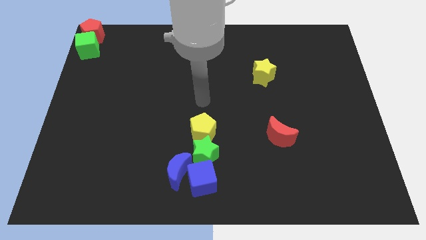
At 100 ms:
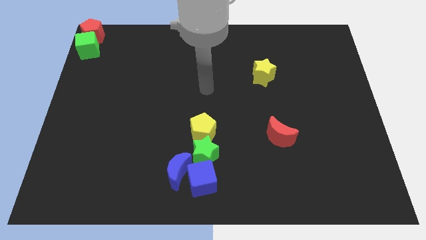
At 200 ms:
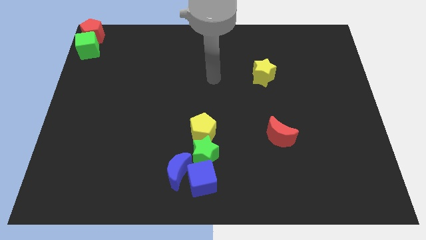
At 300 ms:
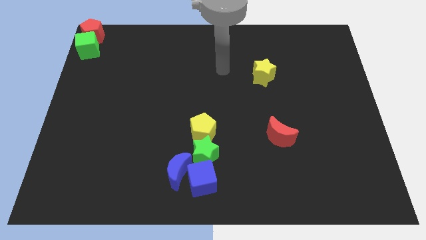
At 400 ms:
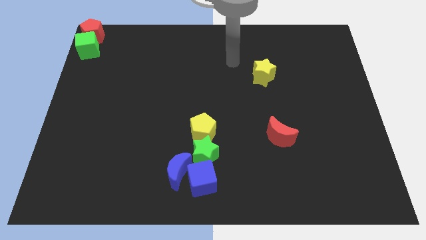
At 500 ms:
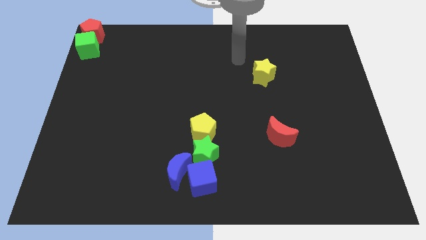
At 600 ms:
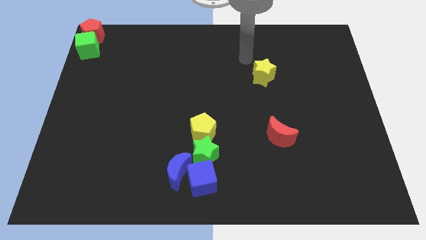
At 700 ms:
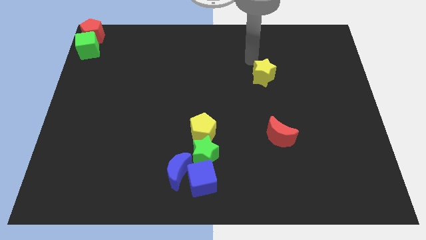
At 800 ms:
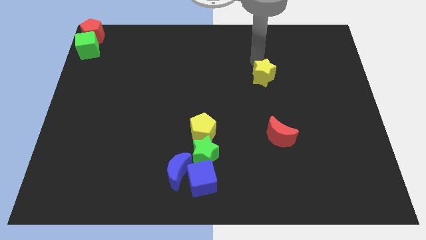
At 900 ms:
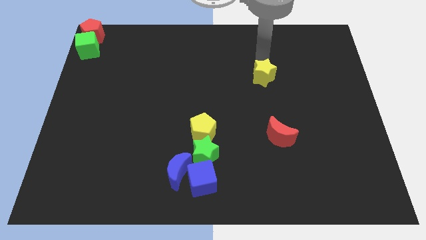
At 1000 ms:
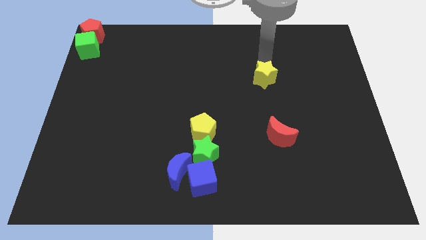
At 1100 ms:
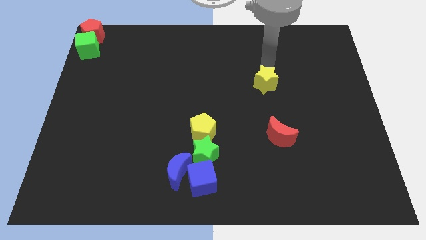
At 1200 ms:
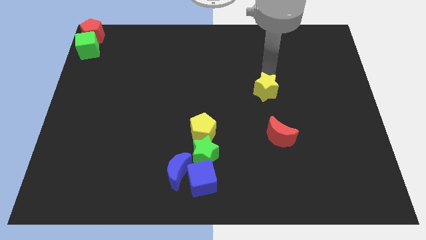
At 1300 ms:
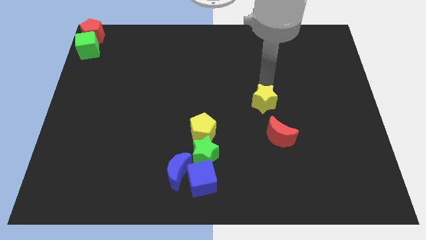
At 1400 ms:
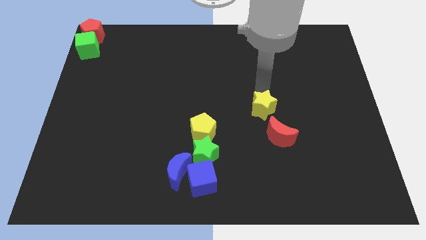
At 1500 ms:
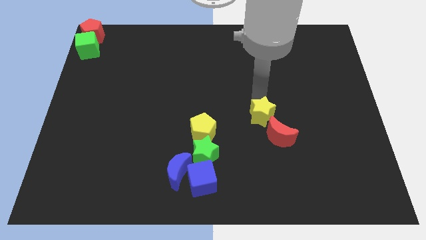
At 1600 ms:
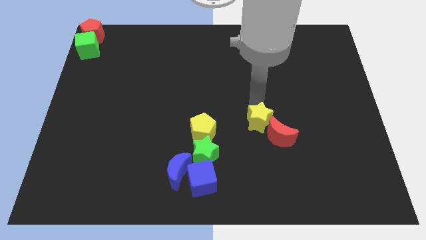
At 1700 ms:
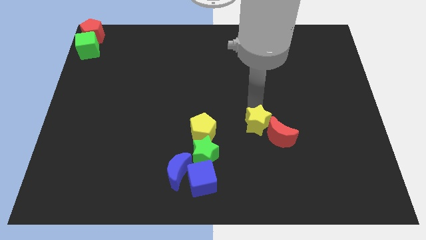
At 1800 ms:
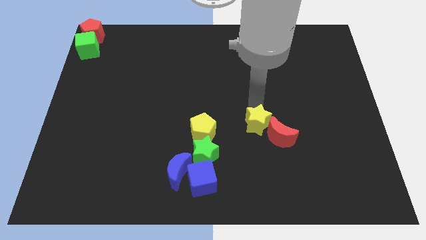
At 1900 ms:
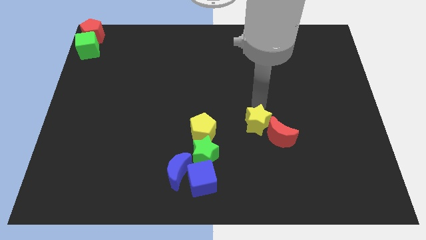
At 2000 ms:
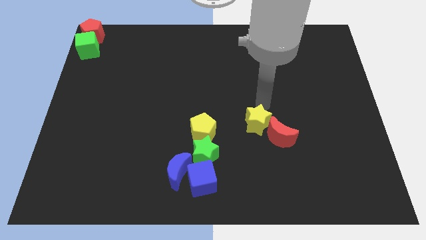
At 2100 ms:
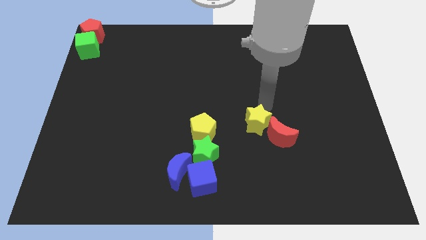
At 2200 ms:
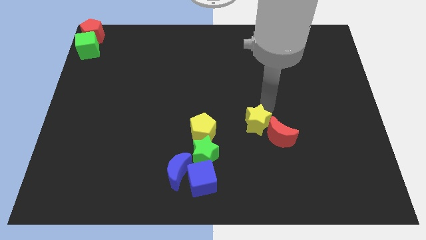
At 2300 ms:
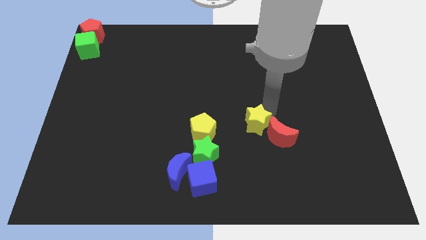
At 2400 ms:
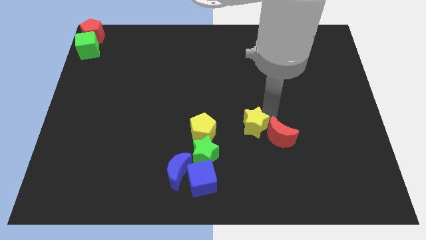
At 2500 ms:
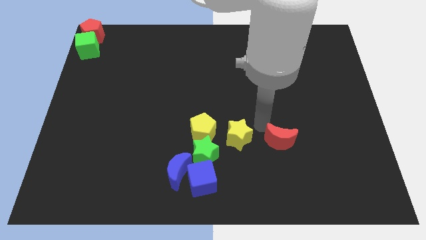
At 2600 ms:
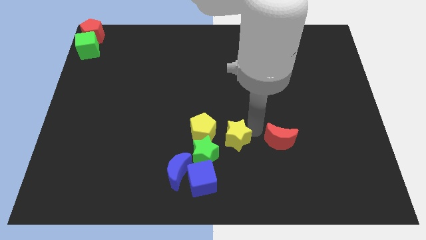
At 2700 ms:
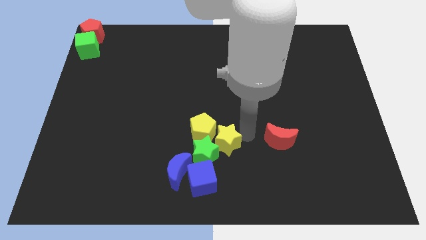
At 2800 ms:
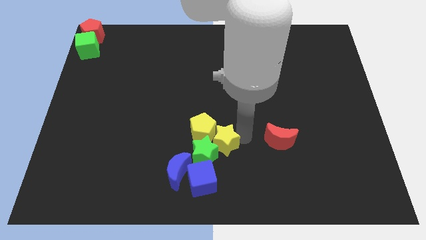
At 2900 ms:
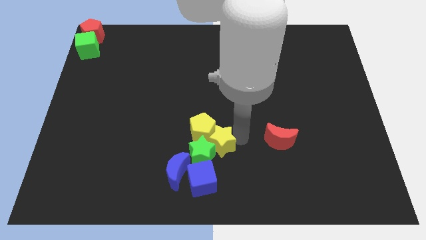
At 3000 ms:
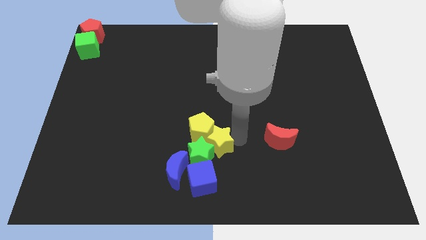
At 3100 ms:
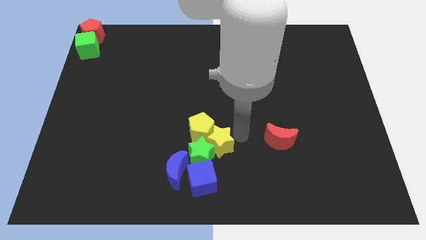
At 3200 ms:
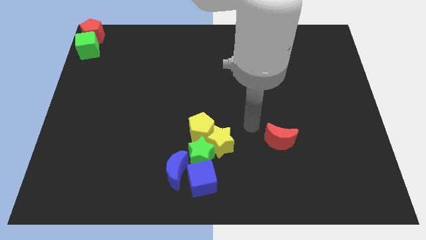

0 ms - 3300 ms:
add the yellow star to the group of blocks at the bottom center of the board

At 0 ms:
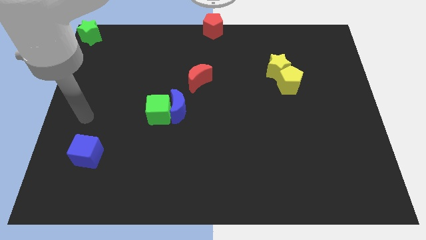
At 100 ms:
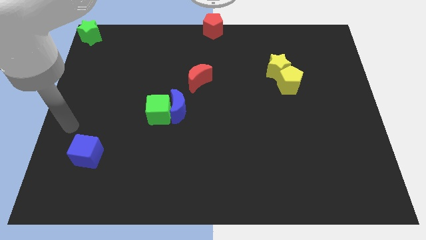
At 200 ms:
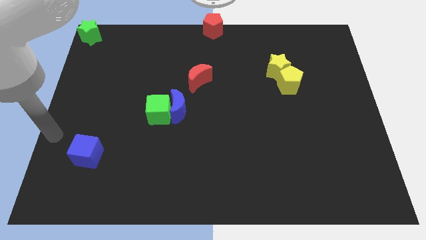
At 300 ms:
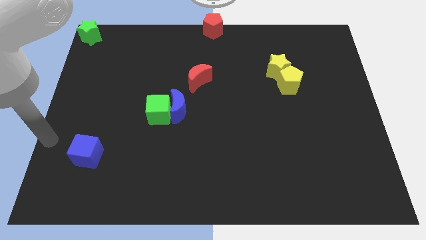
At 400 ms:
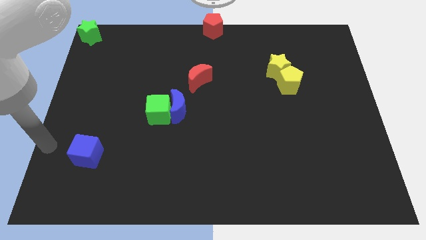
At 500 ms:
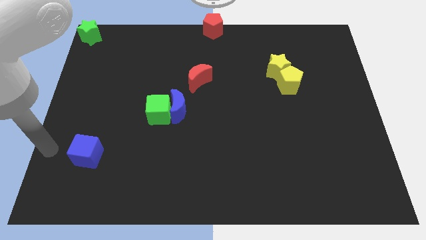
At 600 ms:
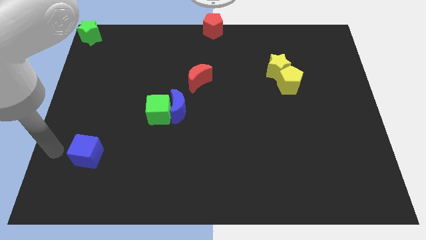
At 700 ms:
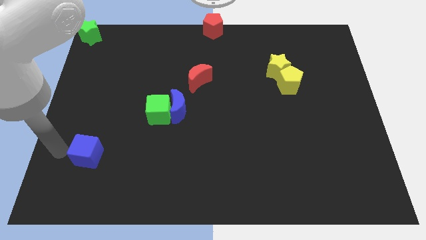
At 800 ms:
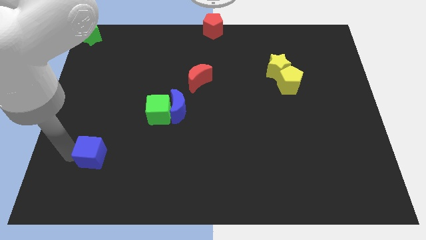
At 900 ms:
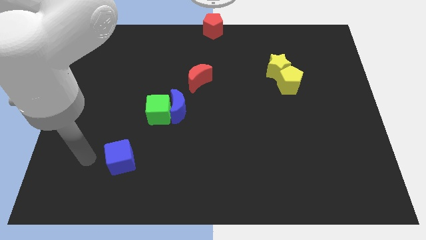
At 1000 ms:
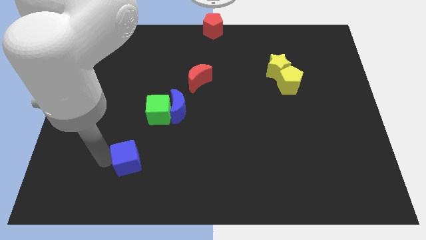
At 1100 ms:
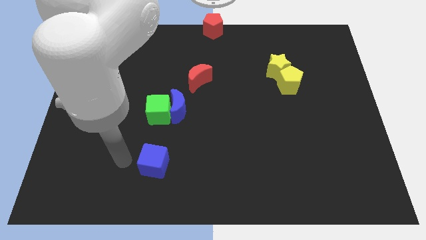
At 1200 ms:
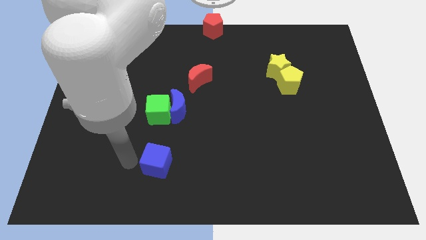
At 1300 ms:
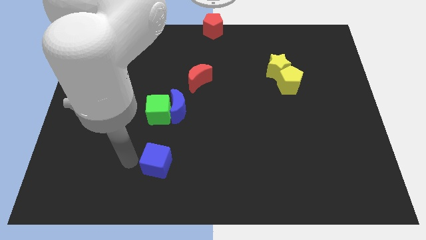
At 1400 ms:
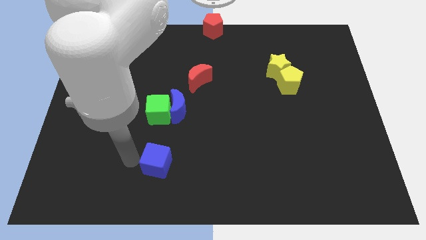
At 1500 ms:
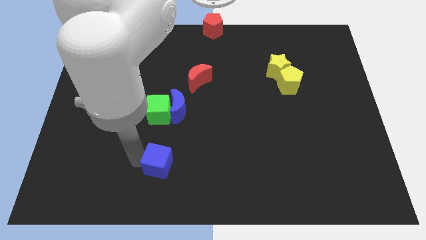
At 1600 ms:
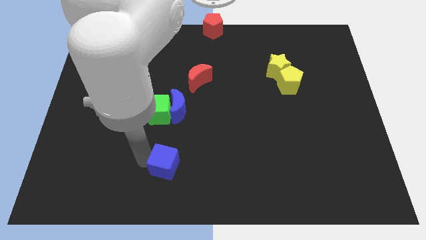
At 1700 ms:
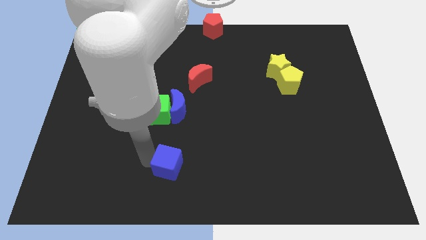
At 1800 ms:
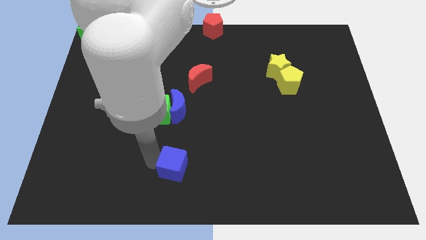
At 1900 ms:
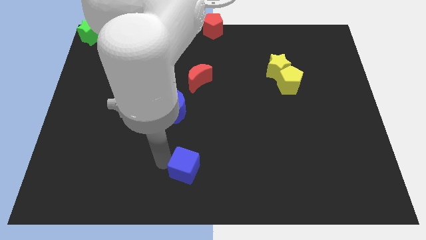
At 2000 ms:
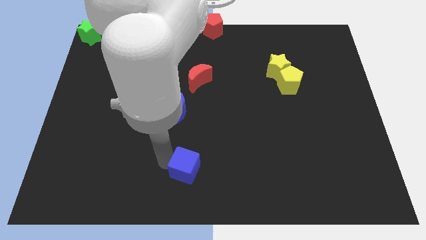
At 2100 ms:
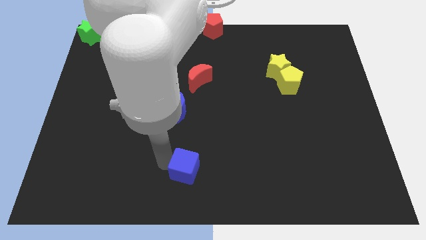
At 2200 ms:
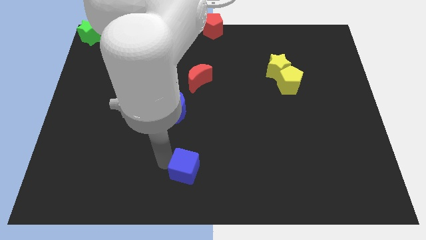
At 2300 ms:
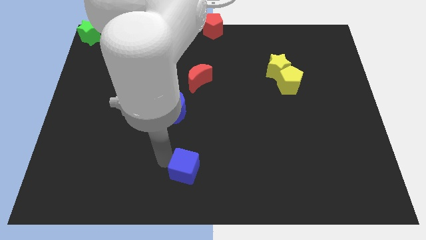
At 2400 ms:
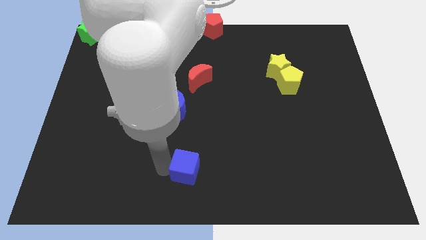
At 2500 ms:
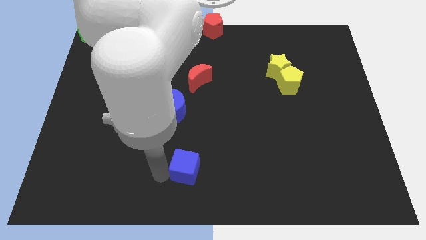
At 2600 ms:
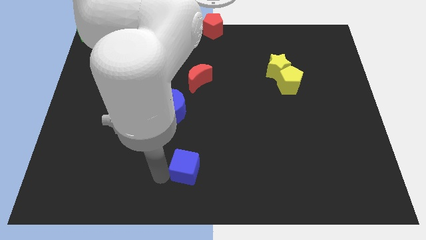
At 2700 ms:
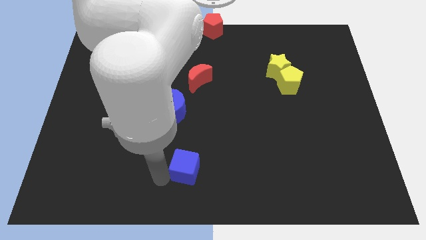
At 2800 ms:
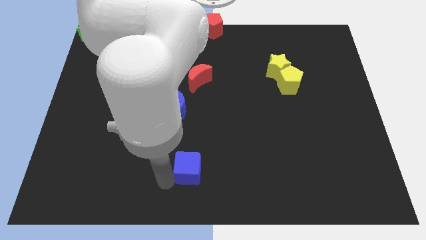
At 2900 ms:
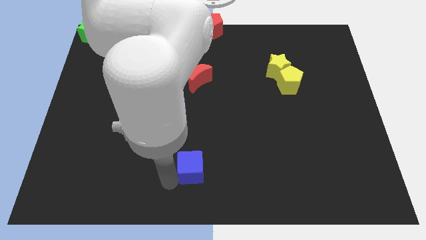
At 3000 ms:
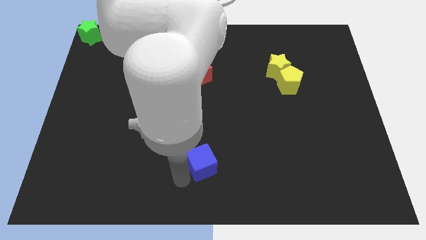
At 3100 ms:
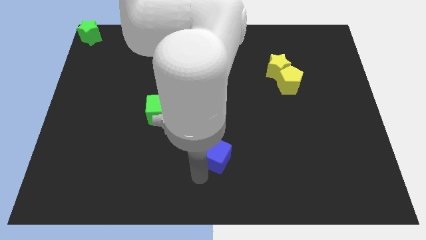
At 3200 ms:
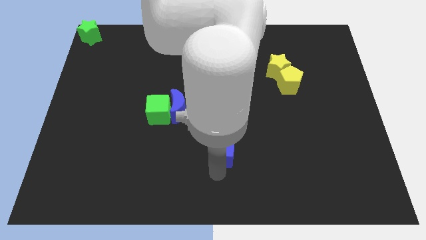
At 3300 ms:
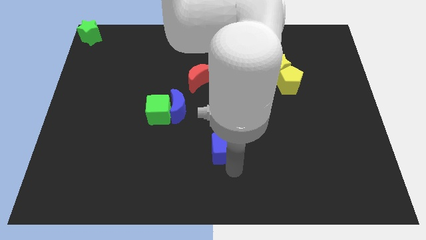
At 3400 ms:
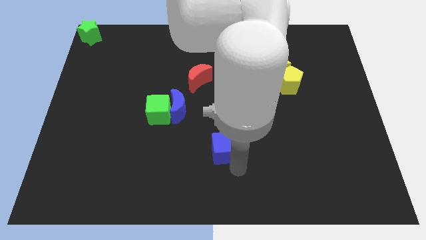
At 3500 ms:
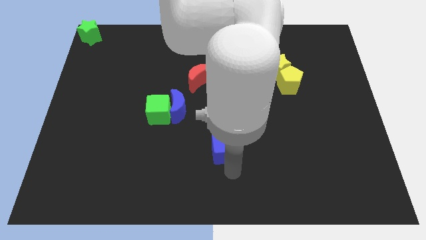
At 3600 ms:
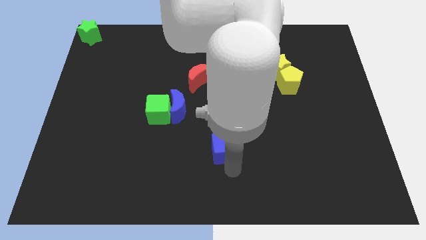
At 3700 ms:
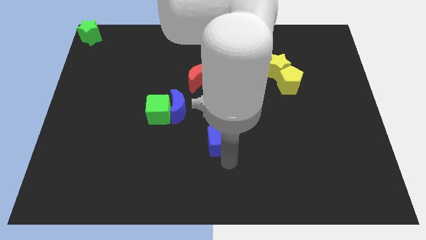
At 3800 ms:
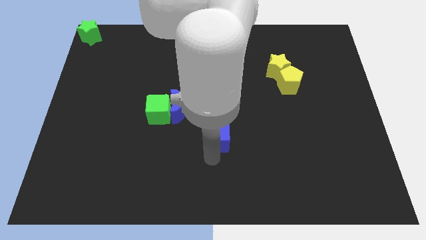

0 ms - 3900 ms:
place the blue cube to the bottom center

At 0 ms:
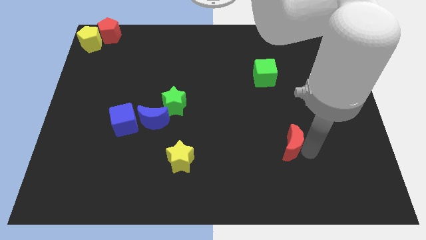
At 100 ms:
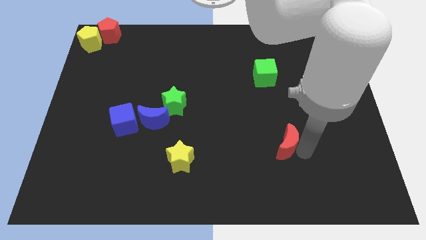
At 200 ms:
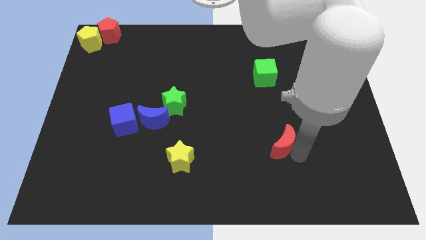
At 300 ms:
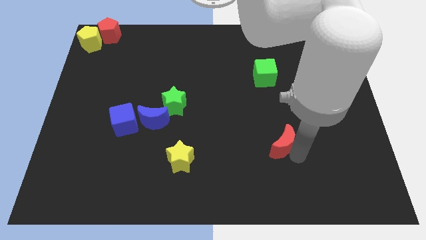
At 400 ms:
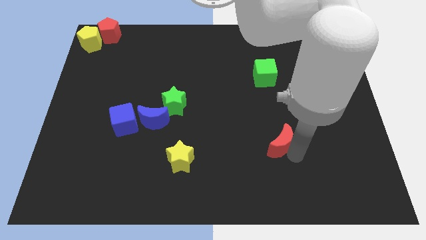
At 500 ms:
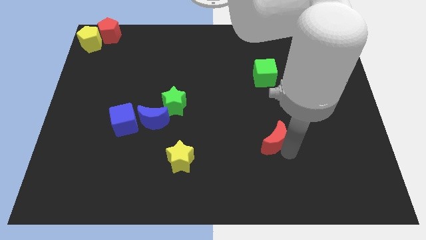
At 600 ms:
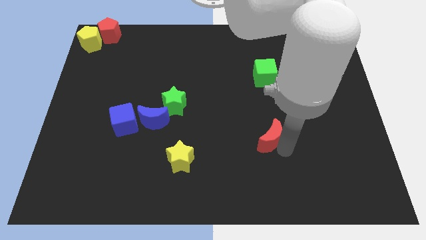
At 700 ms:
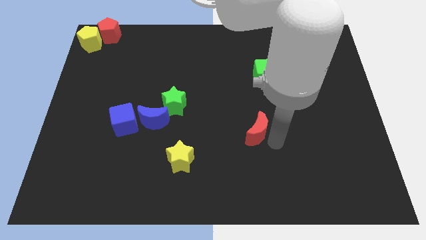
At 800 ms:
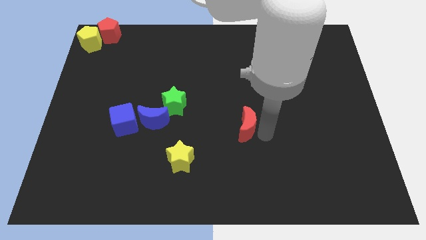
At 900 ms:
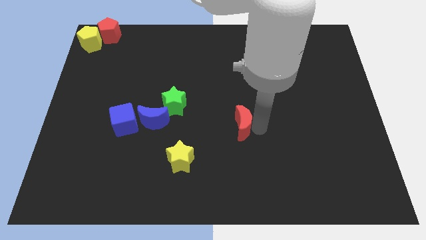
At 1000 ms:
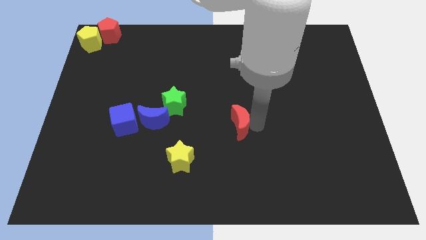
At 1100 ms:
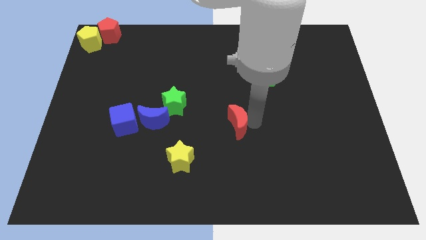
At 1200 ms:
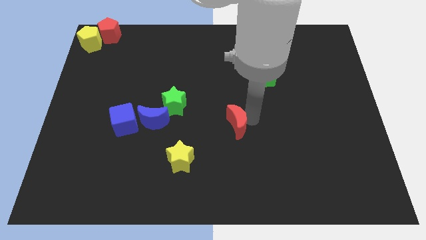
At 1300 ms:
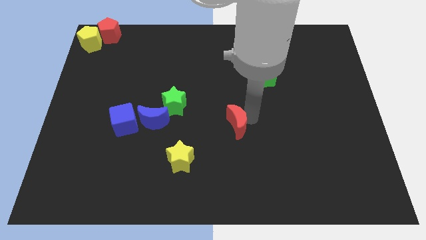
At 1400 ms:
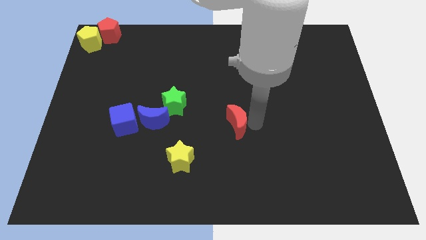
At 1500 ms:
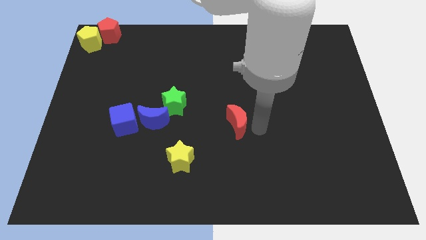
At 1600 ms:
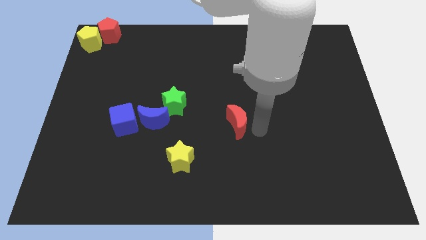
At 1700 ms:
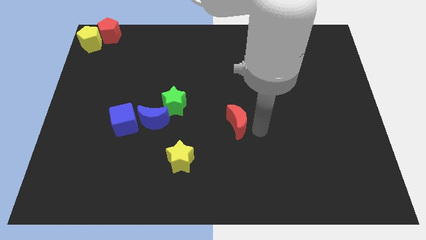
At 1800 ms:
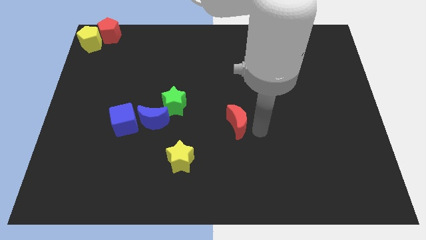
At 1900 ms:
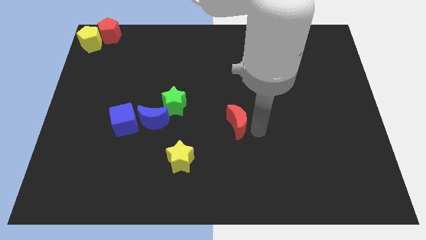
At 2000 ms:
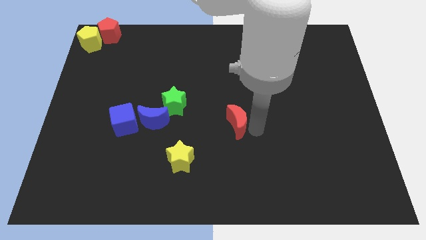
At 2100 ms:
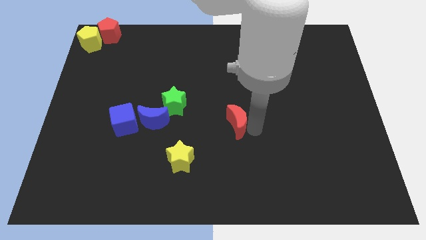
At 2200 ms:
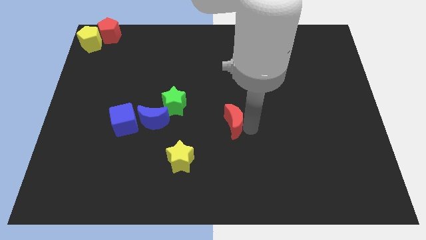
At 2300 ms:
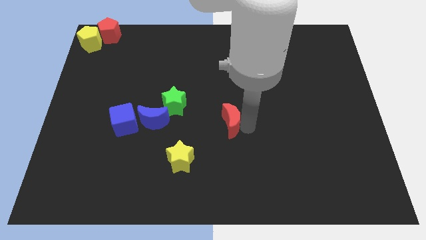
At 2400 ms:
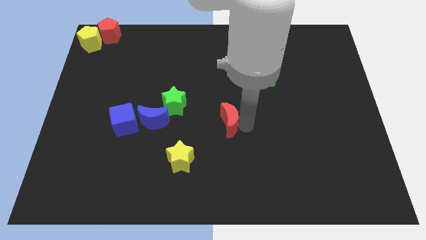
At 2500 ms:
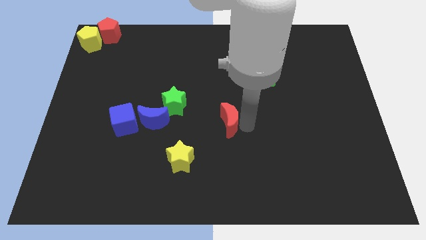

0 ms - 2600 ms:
put the red crescent to the right of the blue crescent
